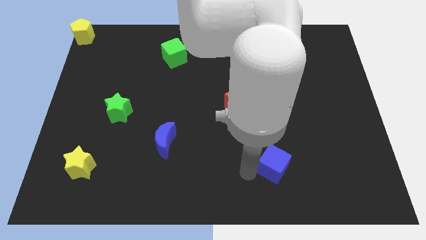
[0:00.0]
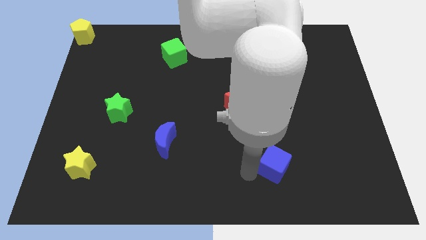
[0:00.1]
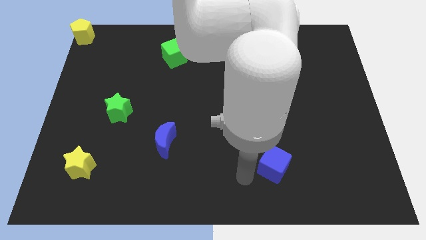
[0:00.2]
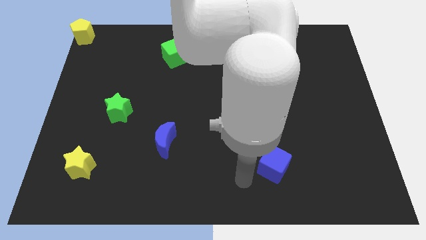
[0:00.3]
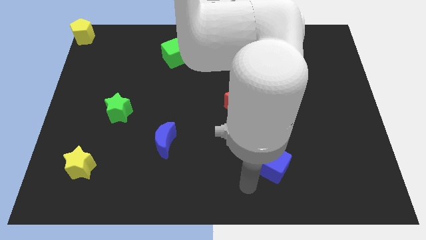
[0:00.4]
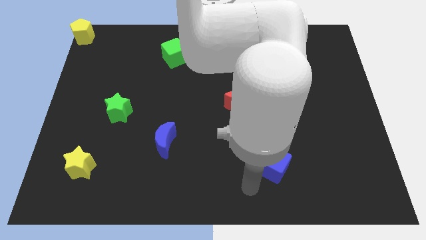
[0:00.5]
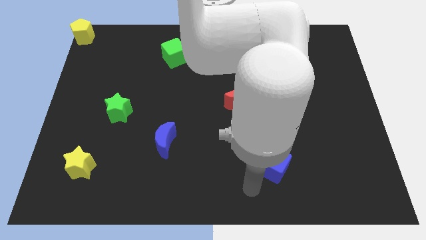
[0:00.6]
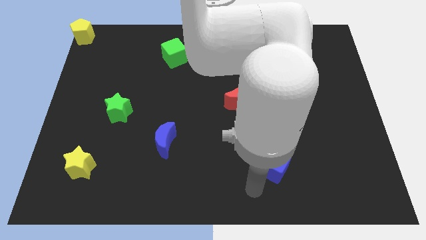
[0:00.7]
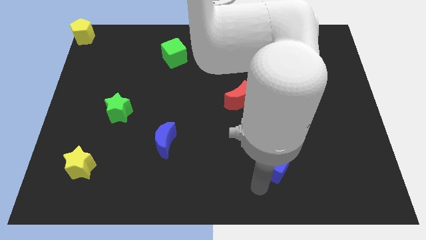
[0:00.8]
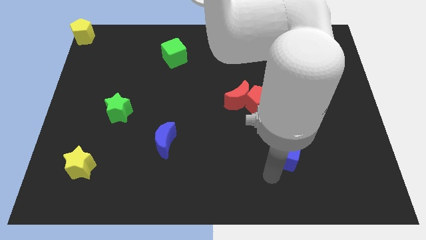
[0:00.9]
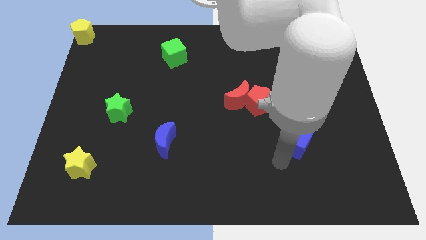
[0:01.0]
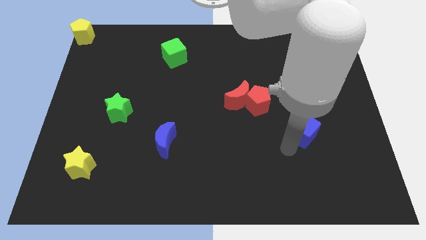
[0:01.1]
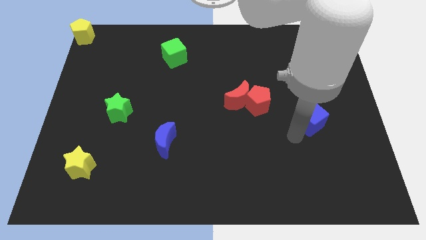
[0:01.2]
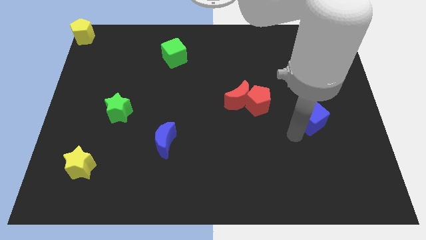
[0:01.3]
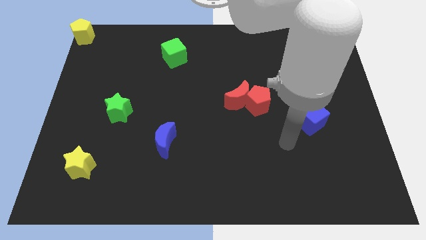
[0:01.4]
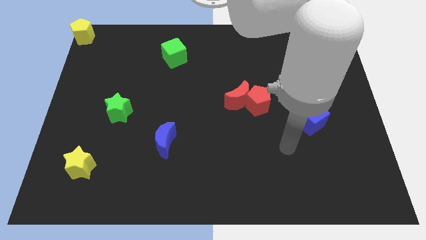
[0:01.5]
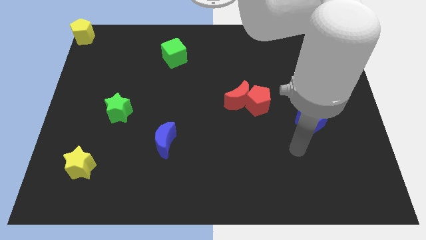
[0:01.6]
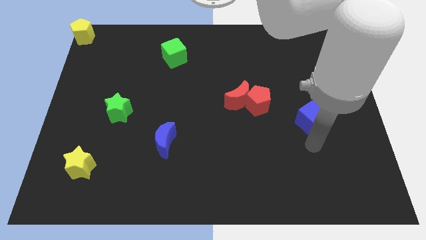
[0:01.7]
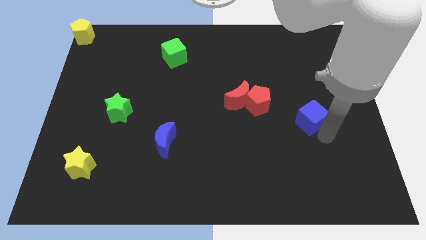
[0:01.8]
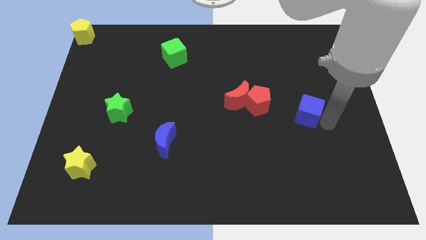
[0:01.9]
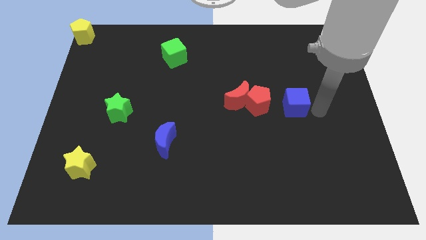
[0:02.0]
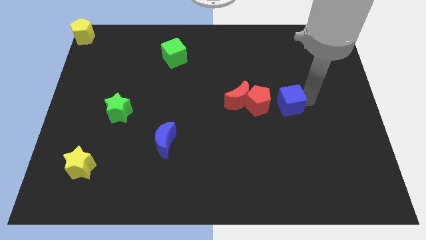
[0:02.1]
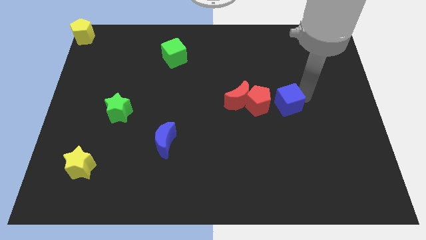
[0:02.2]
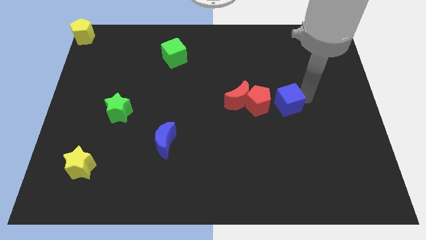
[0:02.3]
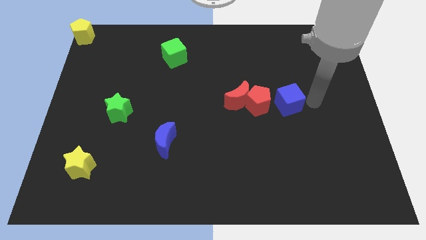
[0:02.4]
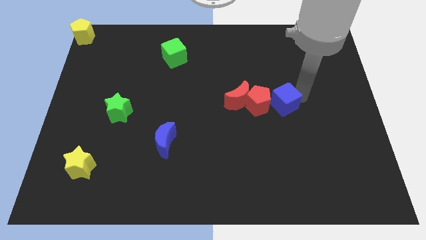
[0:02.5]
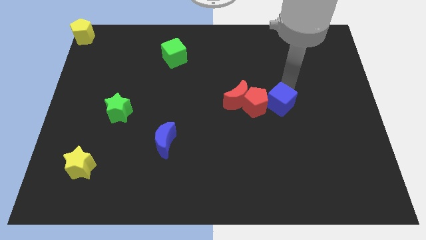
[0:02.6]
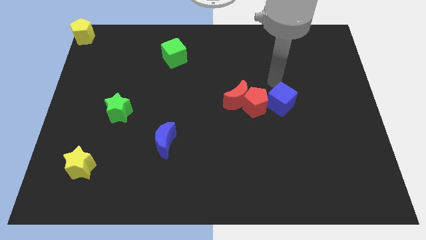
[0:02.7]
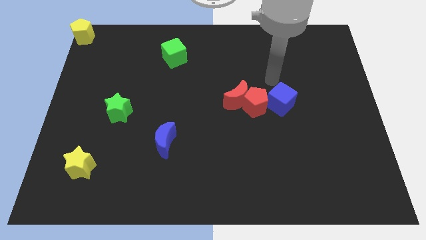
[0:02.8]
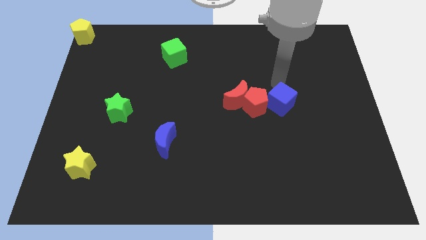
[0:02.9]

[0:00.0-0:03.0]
push blue cube towards the red pentagon

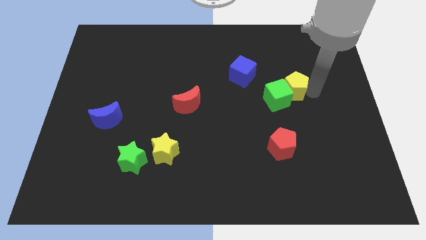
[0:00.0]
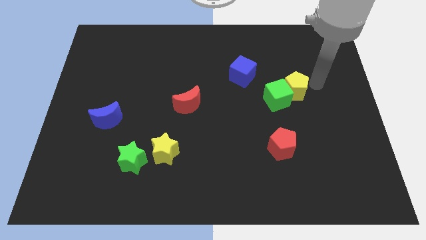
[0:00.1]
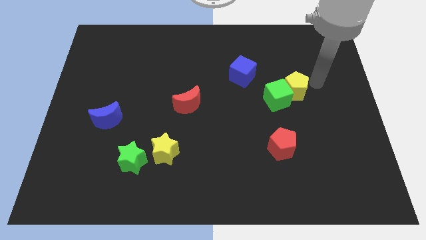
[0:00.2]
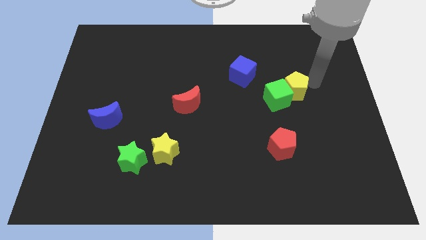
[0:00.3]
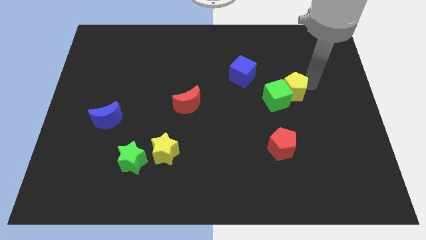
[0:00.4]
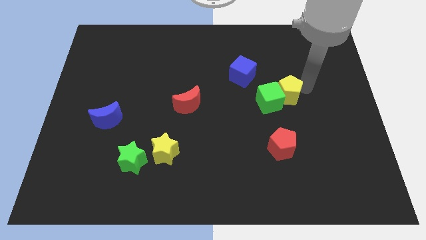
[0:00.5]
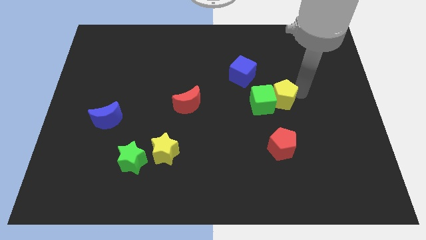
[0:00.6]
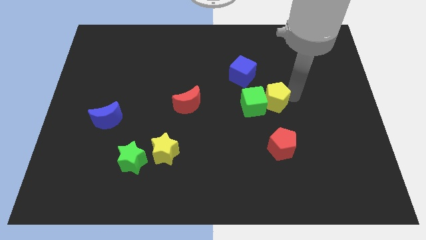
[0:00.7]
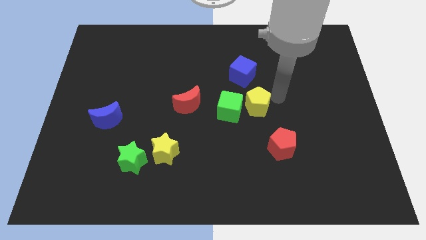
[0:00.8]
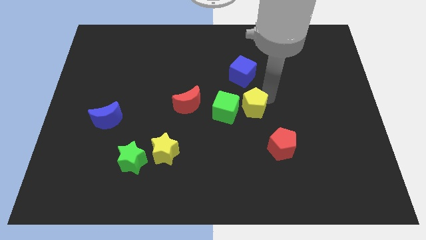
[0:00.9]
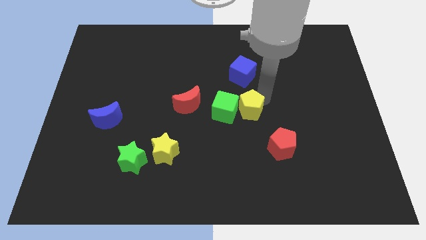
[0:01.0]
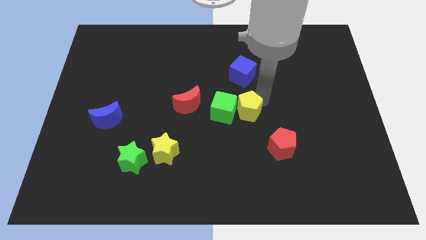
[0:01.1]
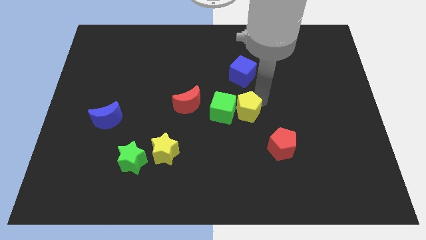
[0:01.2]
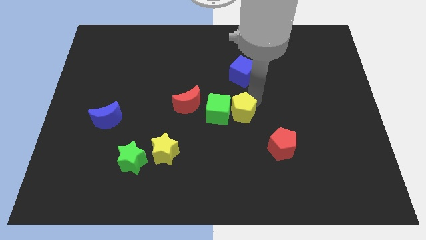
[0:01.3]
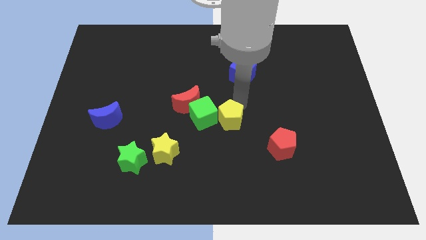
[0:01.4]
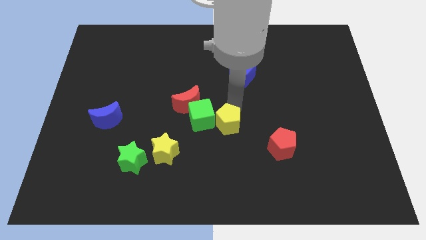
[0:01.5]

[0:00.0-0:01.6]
push green cube along with yellow pentagon to center

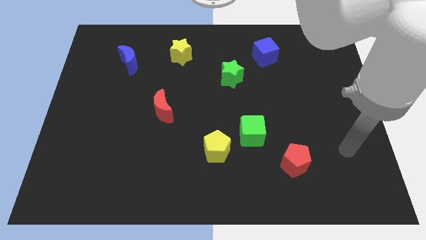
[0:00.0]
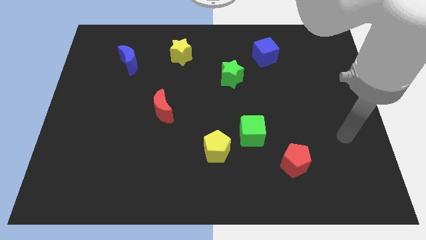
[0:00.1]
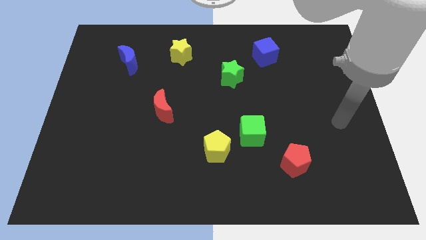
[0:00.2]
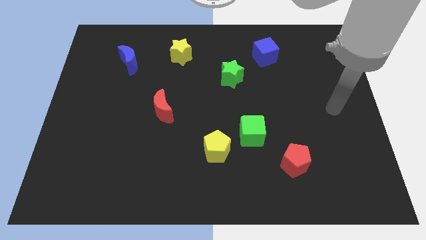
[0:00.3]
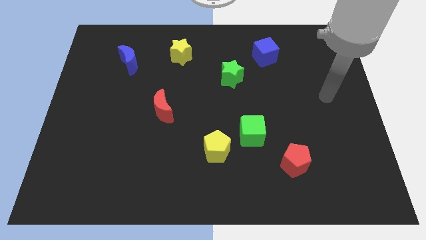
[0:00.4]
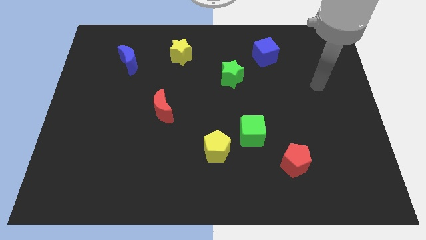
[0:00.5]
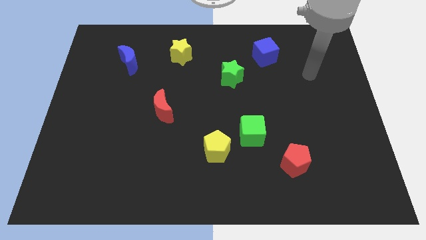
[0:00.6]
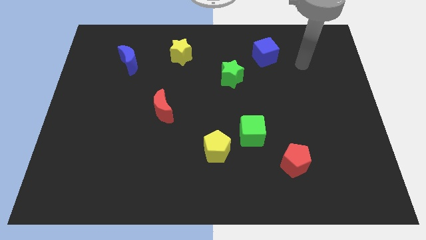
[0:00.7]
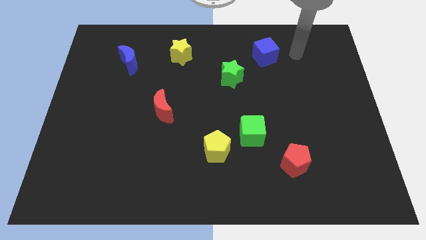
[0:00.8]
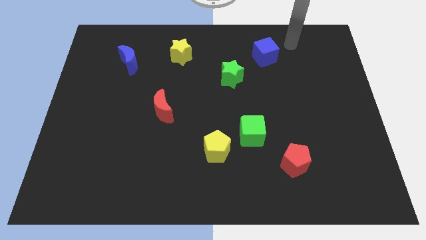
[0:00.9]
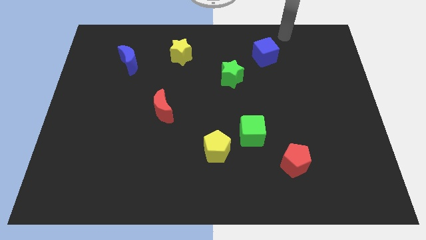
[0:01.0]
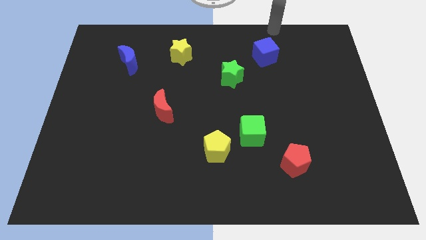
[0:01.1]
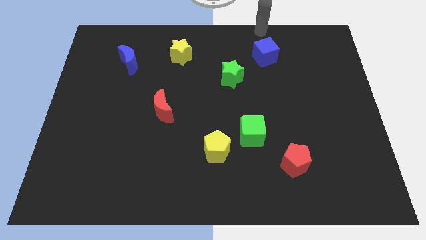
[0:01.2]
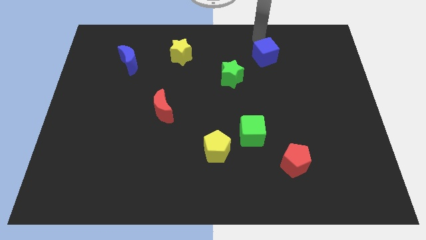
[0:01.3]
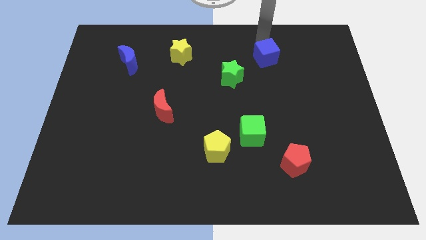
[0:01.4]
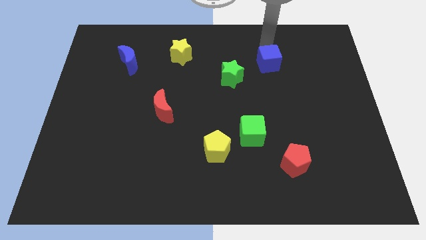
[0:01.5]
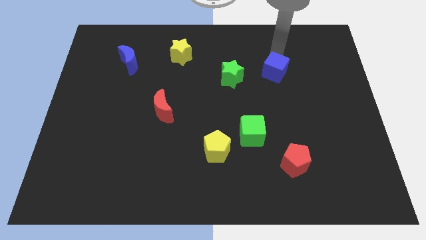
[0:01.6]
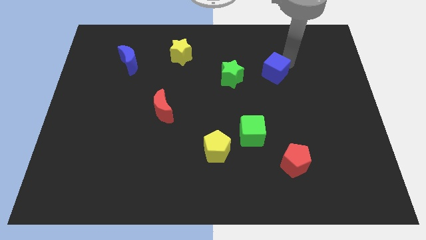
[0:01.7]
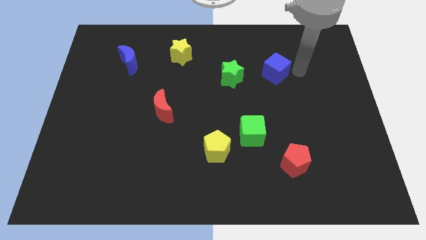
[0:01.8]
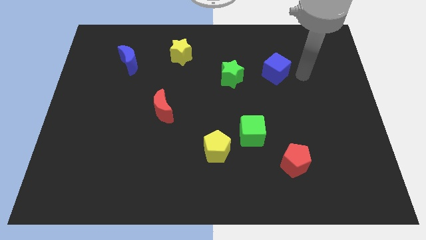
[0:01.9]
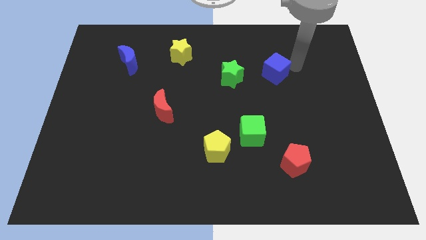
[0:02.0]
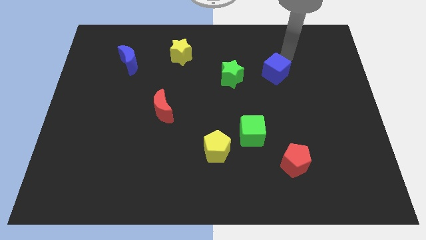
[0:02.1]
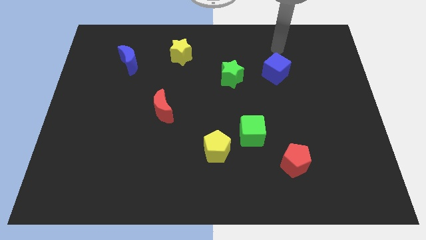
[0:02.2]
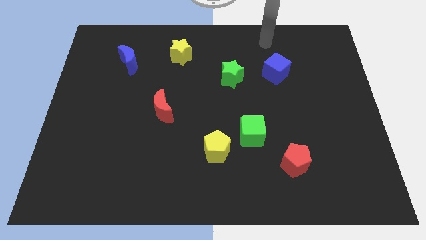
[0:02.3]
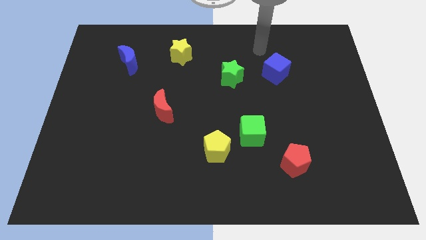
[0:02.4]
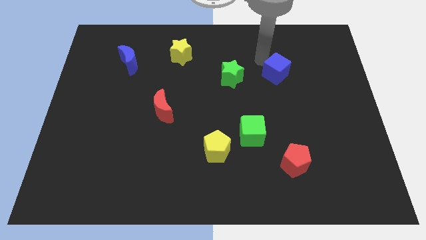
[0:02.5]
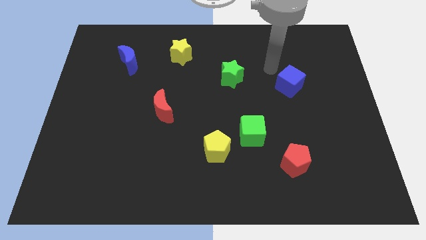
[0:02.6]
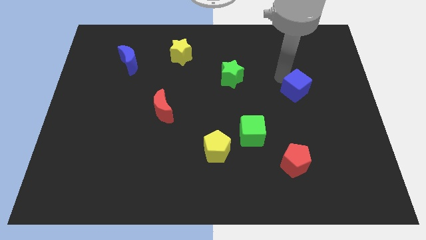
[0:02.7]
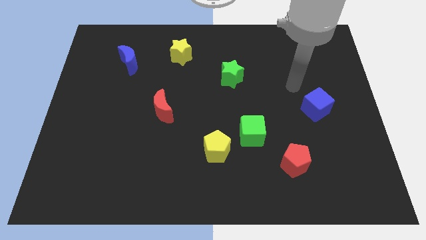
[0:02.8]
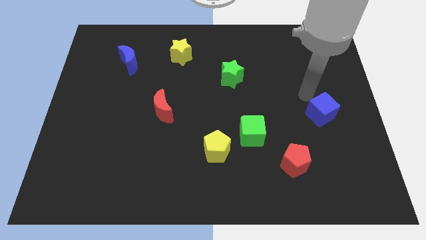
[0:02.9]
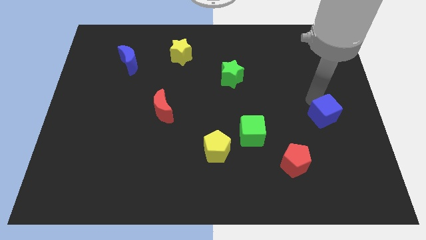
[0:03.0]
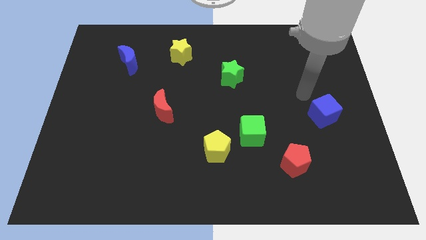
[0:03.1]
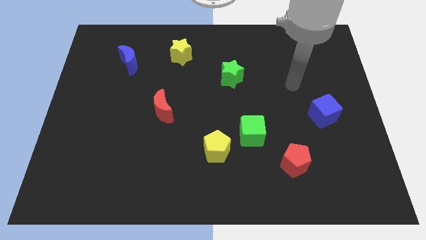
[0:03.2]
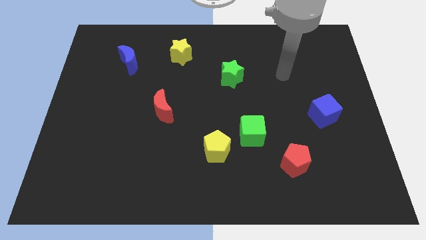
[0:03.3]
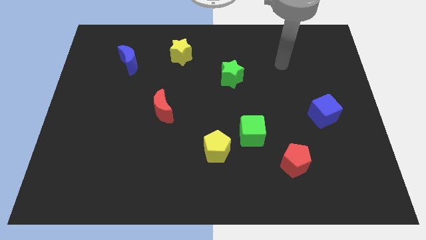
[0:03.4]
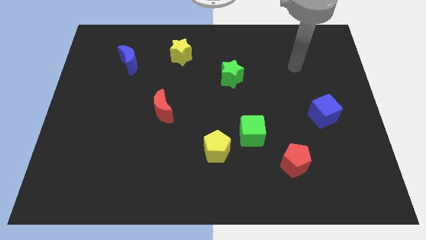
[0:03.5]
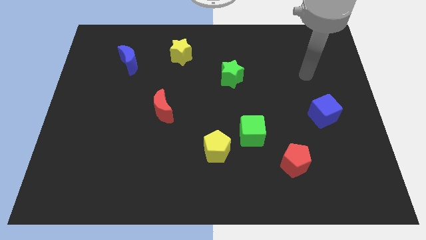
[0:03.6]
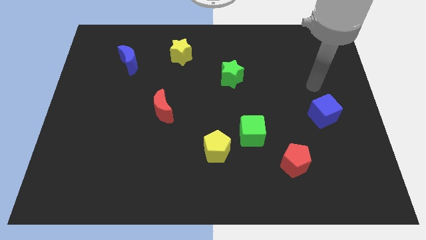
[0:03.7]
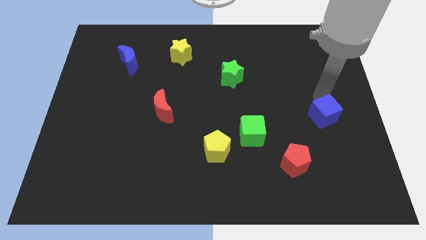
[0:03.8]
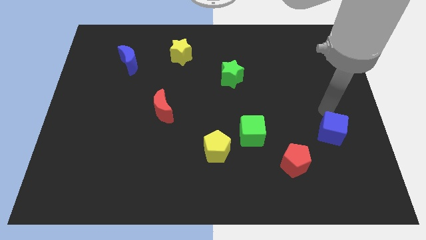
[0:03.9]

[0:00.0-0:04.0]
push the blue cube diagonally to green star

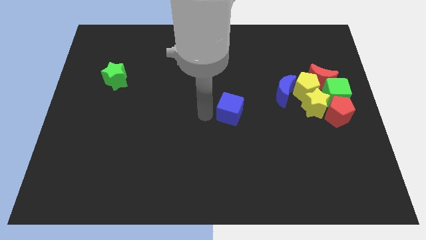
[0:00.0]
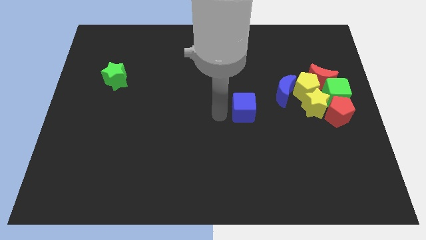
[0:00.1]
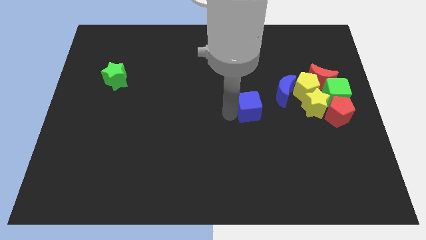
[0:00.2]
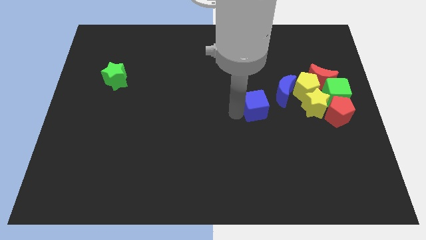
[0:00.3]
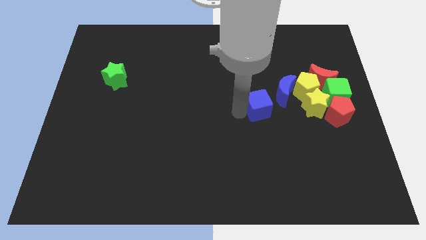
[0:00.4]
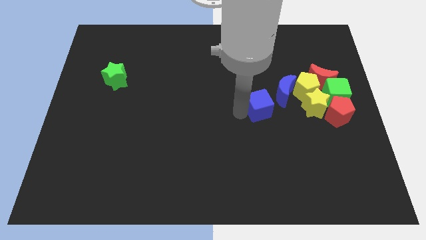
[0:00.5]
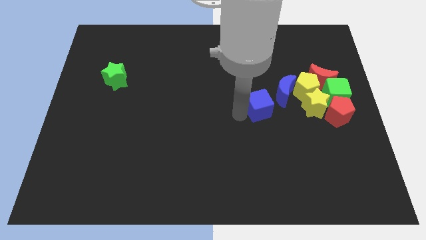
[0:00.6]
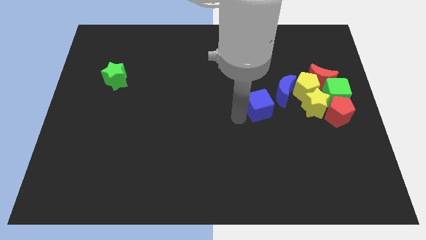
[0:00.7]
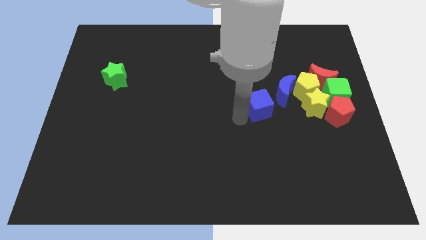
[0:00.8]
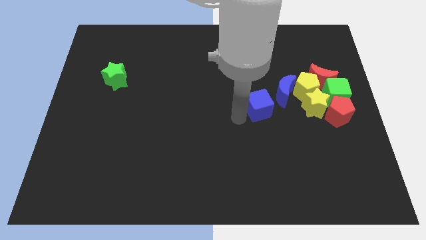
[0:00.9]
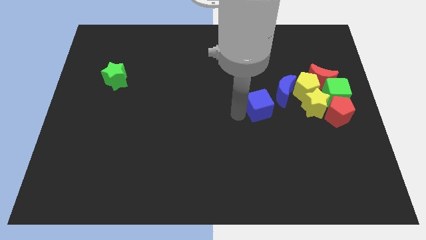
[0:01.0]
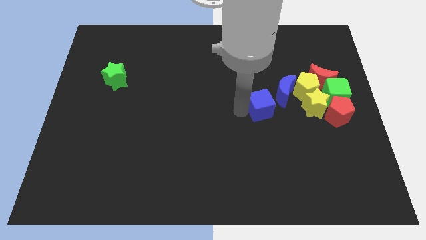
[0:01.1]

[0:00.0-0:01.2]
push the blue cube towards the group of bloacks
